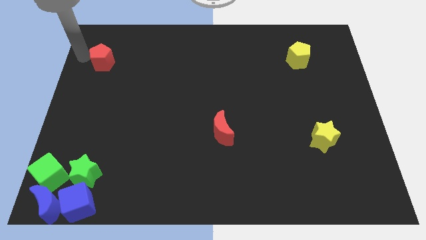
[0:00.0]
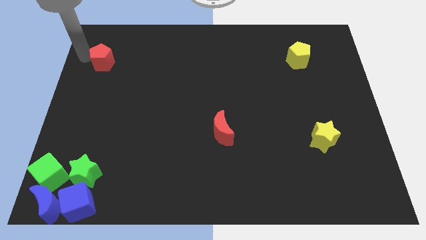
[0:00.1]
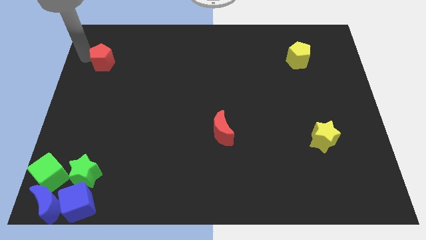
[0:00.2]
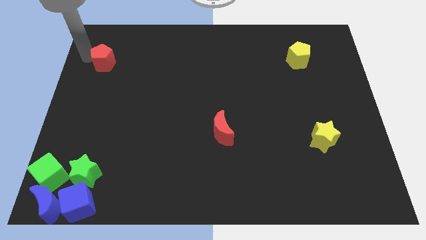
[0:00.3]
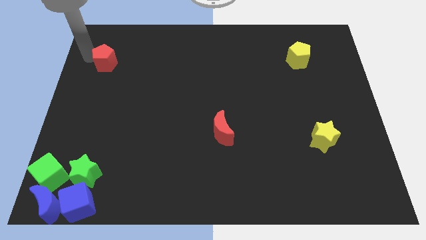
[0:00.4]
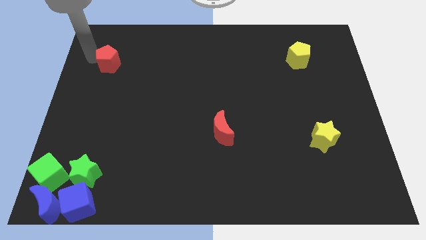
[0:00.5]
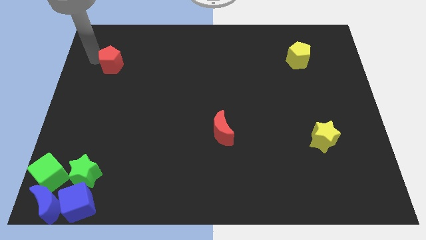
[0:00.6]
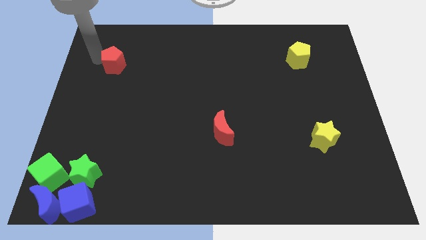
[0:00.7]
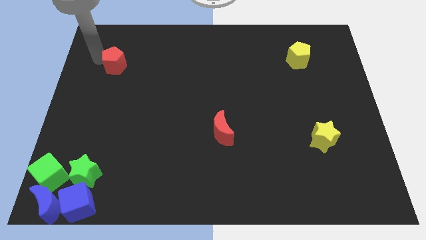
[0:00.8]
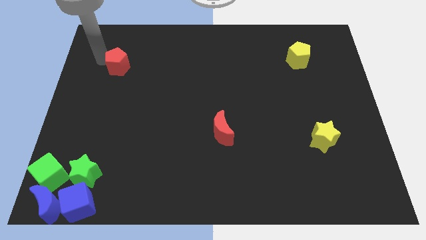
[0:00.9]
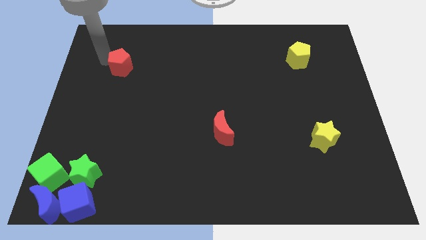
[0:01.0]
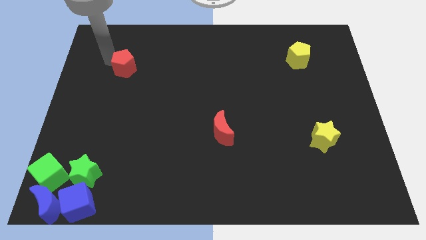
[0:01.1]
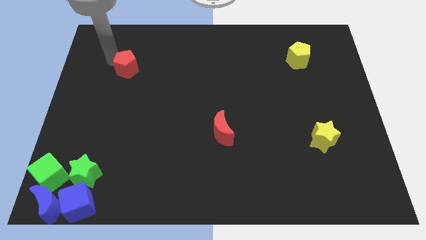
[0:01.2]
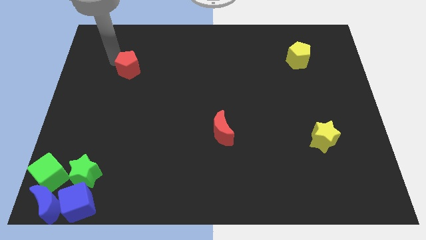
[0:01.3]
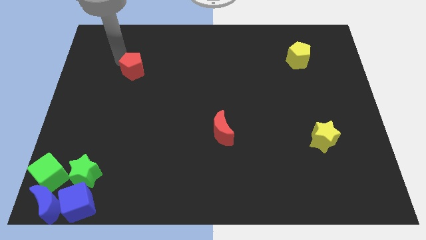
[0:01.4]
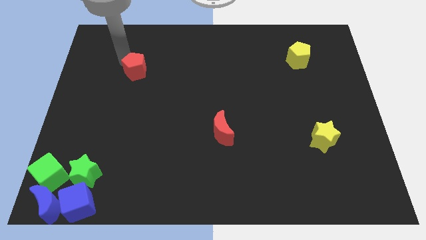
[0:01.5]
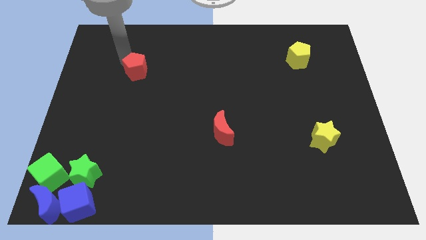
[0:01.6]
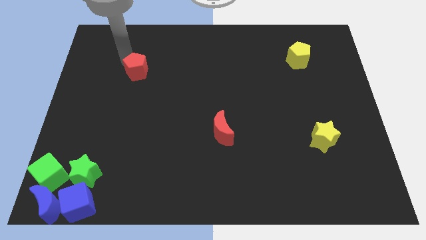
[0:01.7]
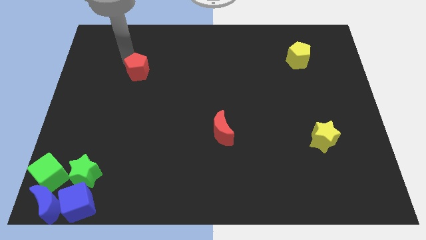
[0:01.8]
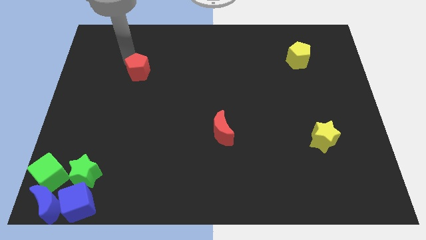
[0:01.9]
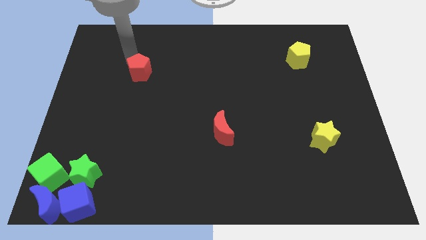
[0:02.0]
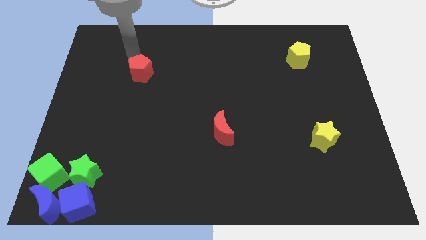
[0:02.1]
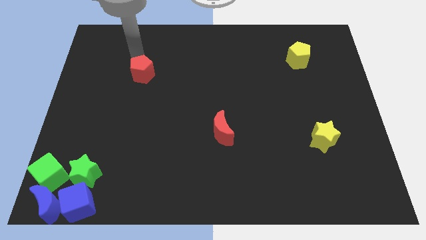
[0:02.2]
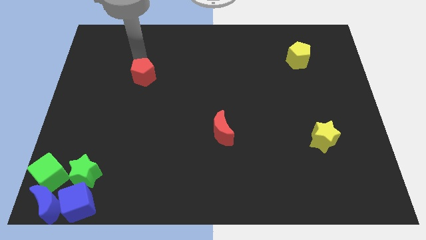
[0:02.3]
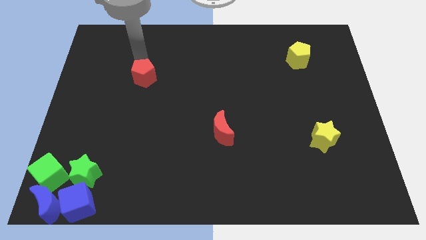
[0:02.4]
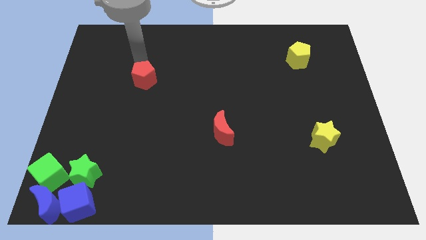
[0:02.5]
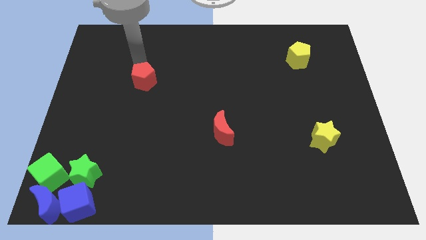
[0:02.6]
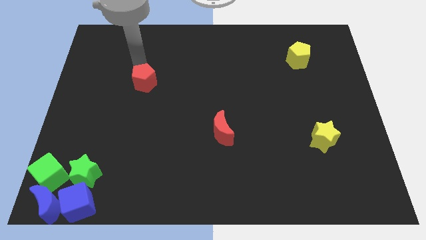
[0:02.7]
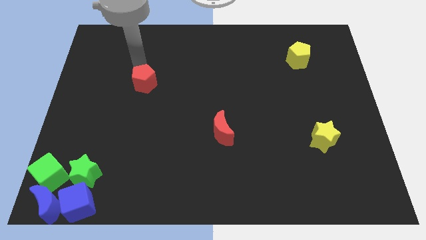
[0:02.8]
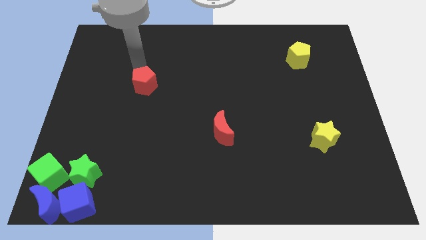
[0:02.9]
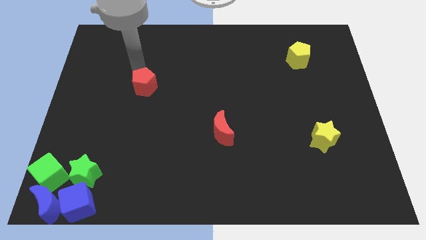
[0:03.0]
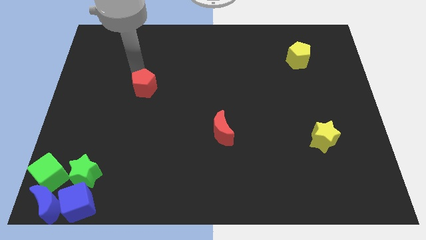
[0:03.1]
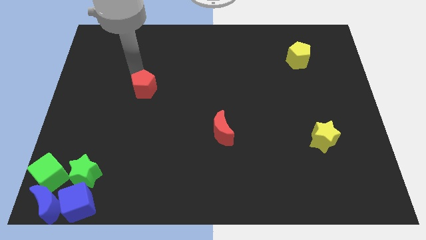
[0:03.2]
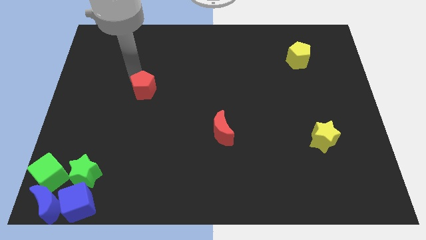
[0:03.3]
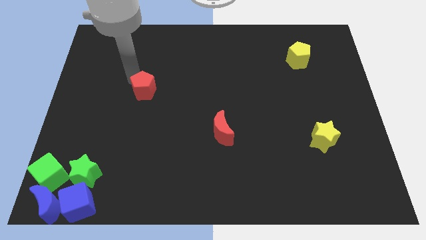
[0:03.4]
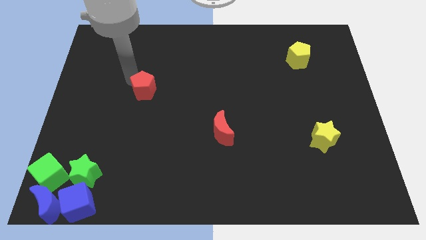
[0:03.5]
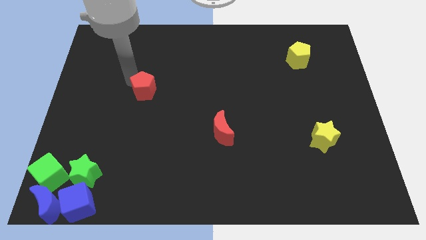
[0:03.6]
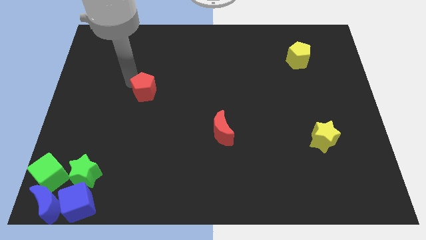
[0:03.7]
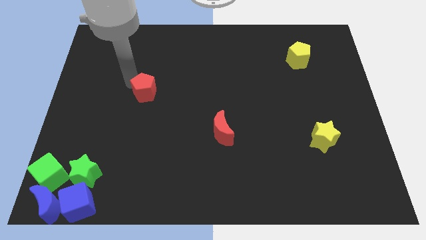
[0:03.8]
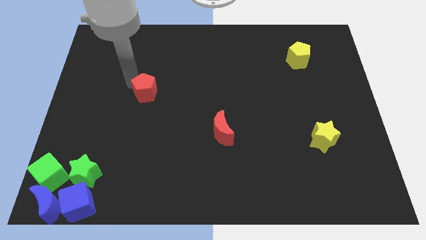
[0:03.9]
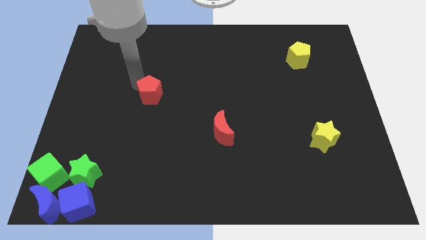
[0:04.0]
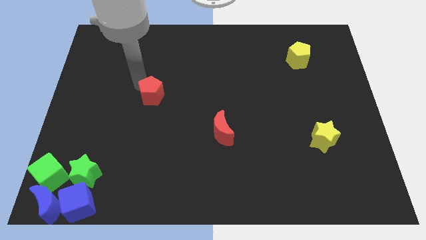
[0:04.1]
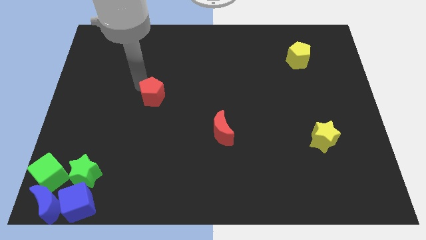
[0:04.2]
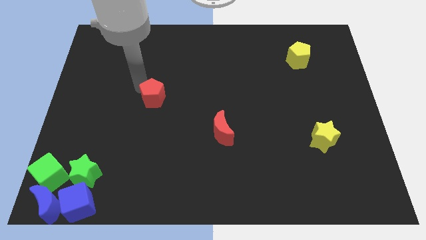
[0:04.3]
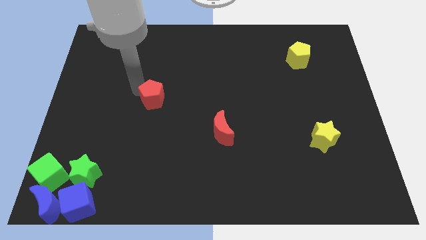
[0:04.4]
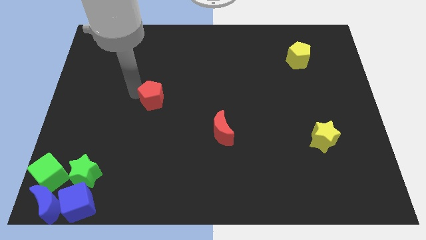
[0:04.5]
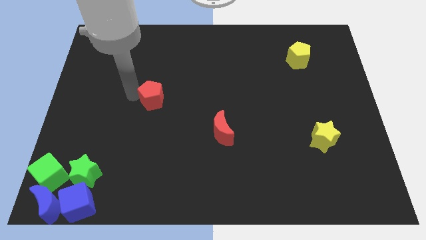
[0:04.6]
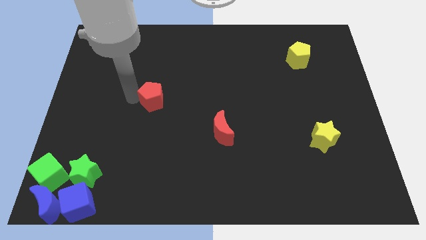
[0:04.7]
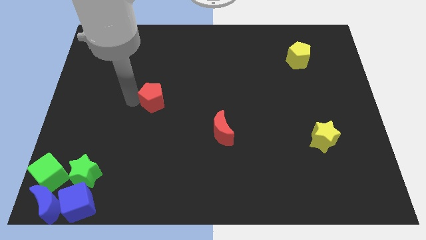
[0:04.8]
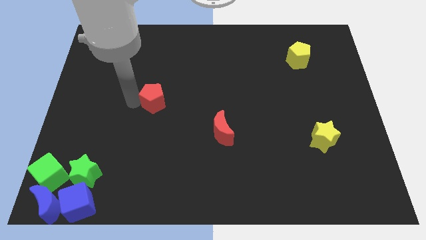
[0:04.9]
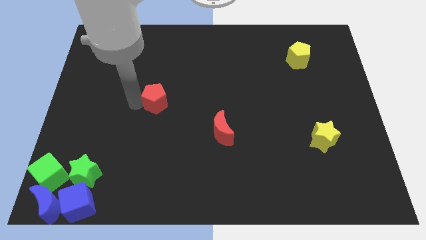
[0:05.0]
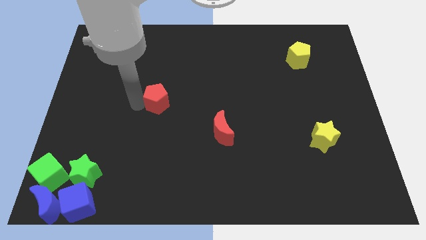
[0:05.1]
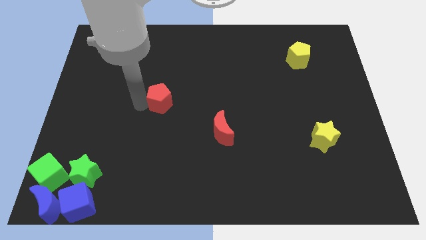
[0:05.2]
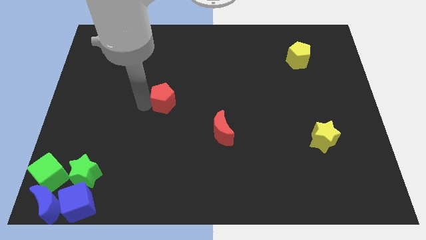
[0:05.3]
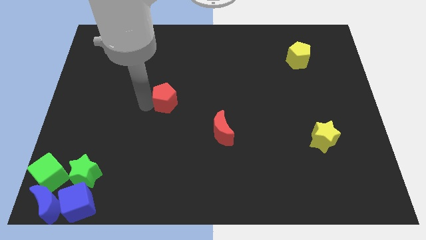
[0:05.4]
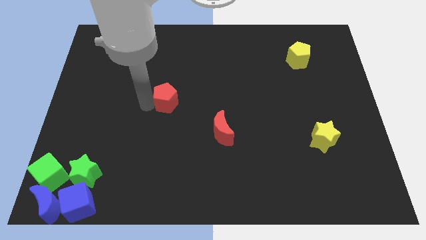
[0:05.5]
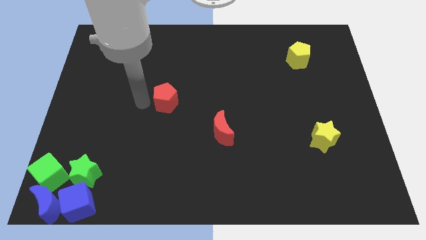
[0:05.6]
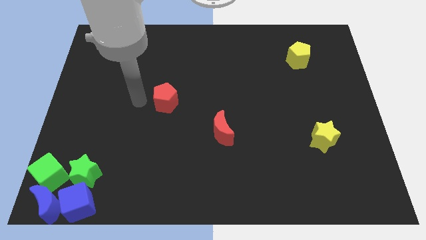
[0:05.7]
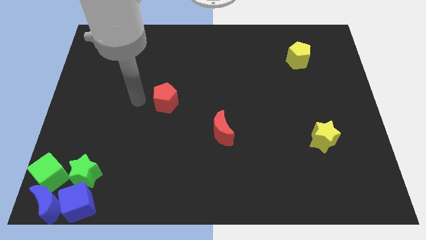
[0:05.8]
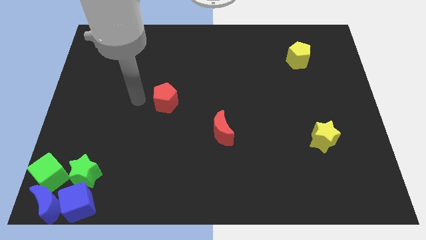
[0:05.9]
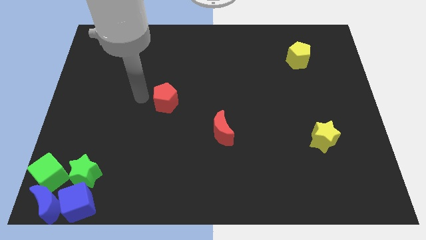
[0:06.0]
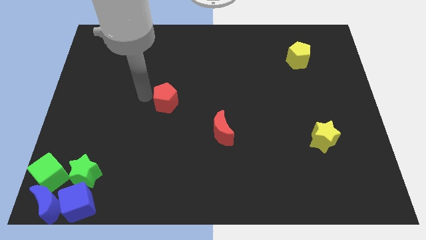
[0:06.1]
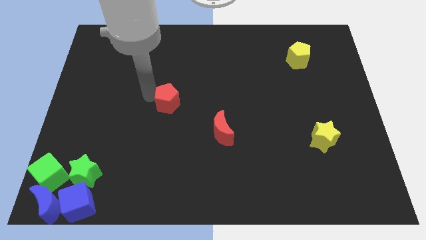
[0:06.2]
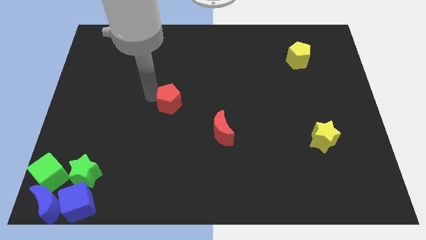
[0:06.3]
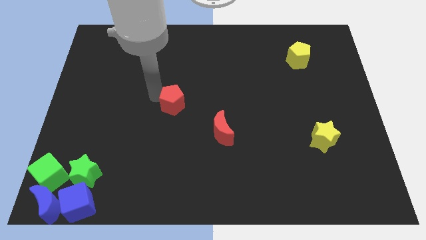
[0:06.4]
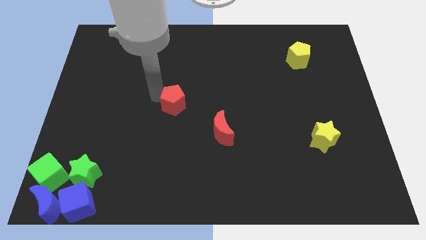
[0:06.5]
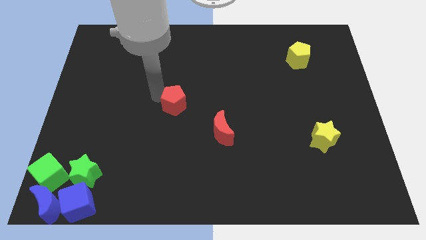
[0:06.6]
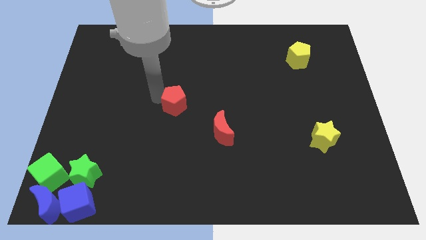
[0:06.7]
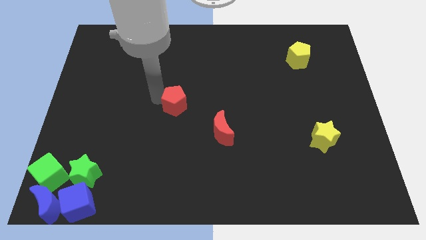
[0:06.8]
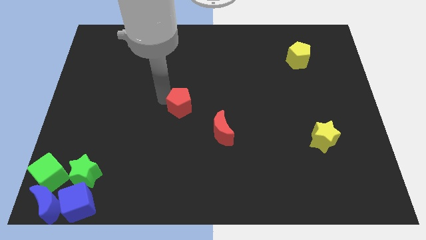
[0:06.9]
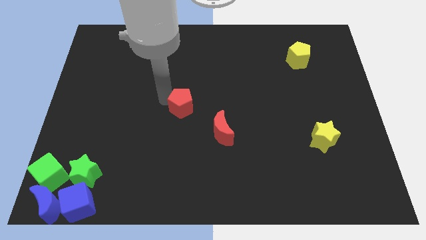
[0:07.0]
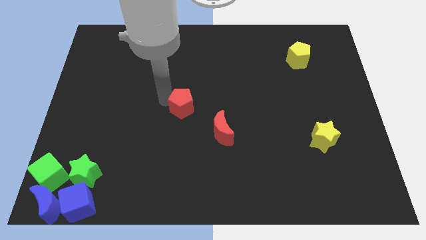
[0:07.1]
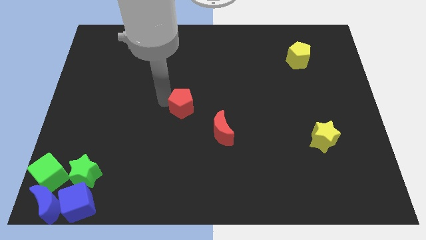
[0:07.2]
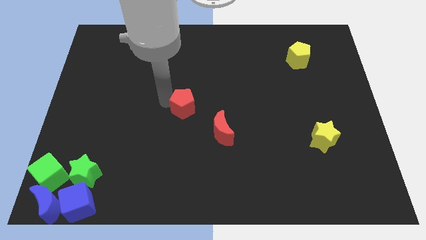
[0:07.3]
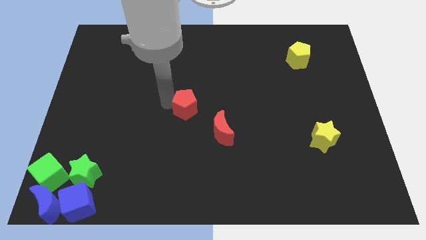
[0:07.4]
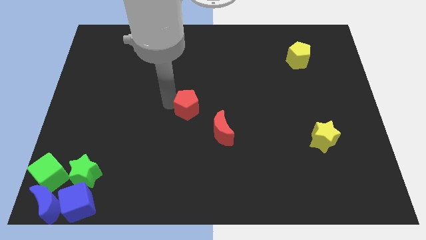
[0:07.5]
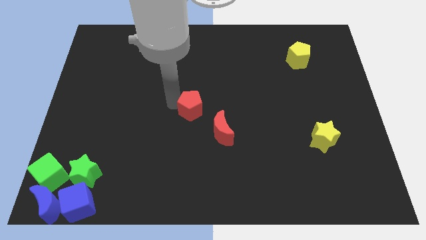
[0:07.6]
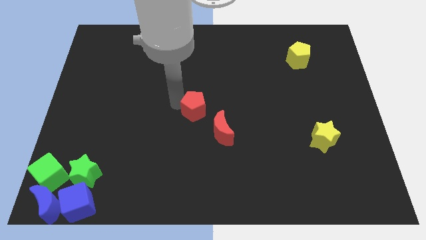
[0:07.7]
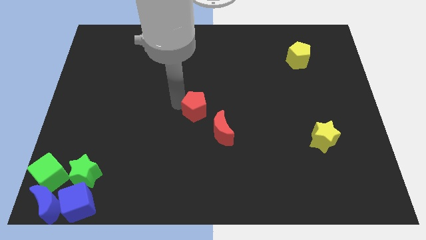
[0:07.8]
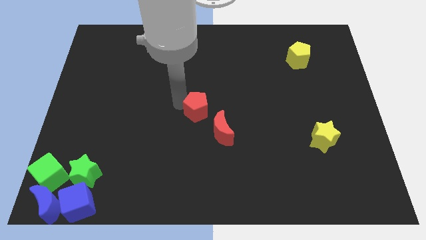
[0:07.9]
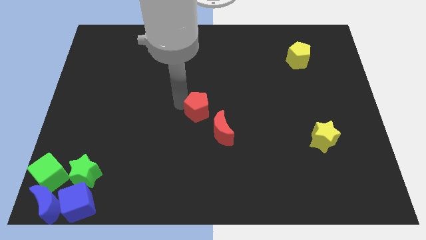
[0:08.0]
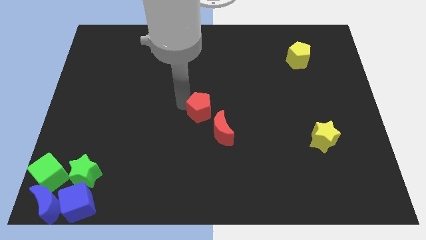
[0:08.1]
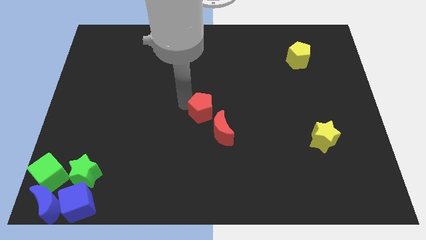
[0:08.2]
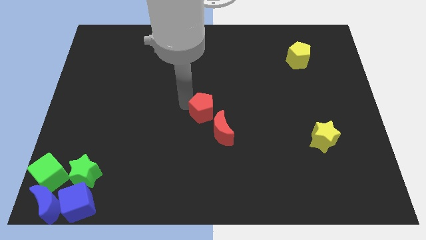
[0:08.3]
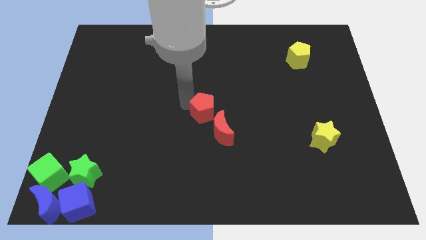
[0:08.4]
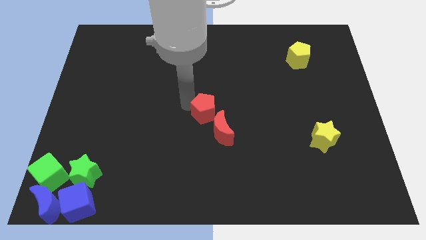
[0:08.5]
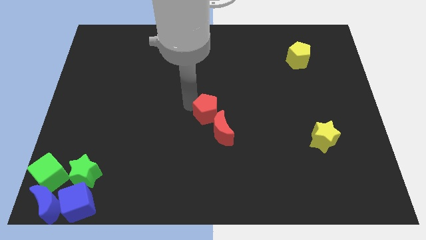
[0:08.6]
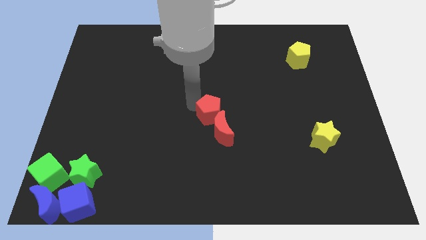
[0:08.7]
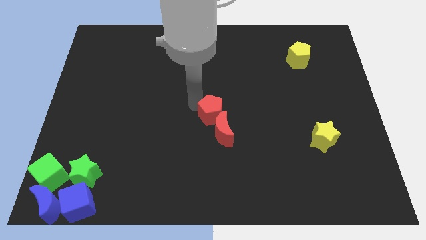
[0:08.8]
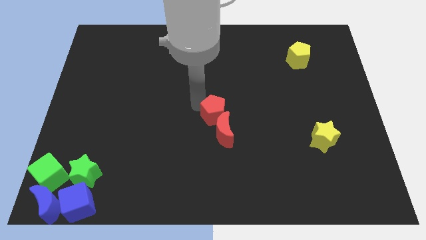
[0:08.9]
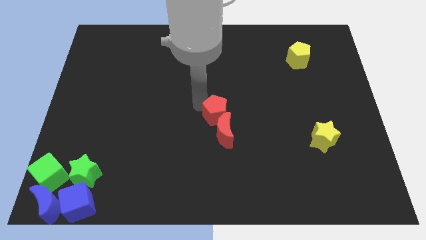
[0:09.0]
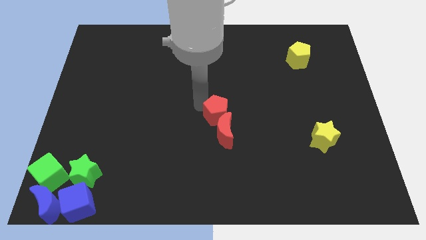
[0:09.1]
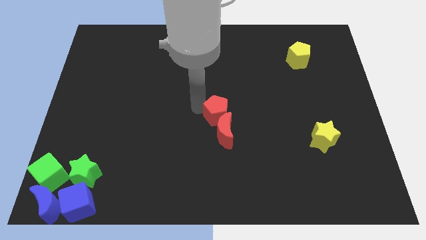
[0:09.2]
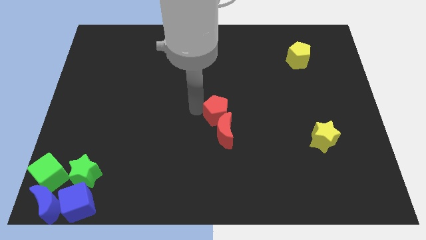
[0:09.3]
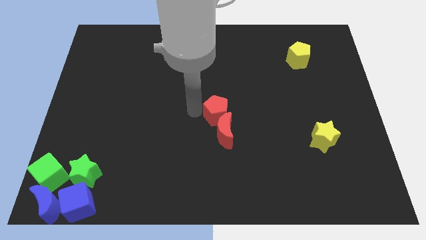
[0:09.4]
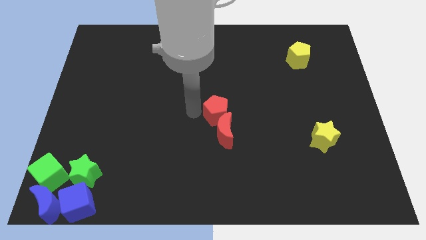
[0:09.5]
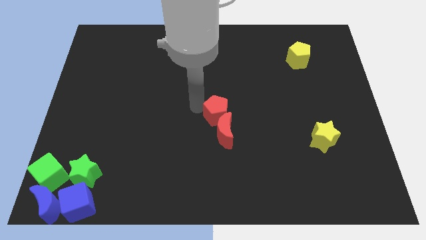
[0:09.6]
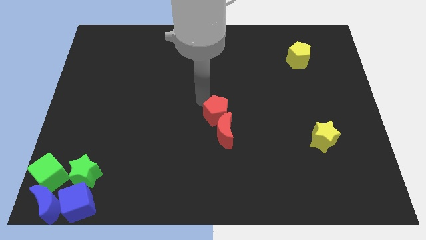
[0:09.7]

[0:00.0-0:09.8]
place red pentagon on above the red crescent
